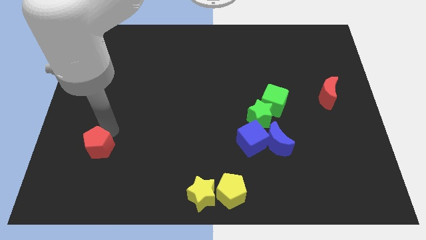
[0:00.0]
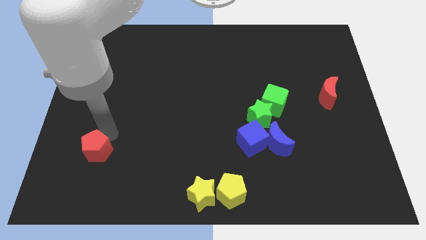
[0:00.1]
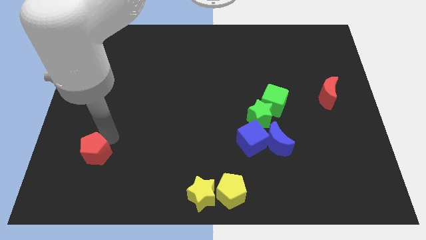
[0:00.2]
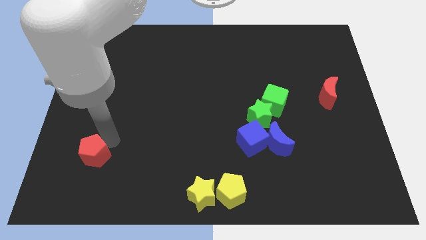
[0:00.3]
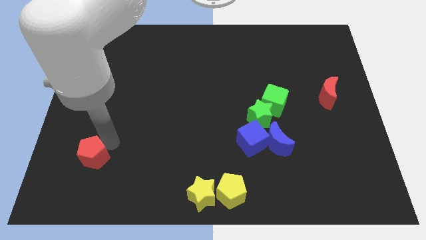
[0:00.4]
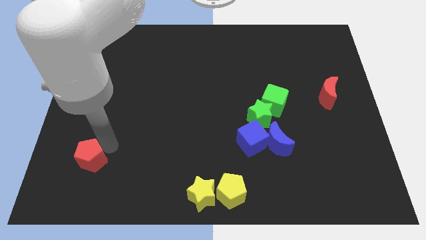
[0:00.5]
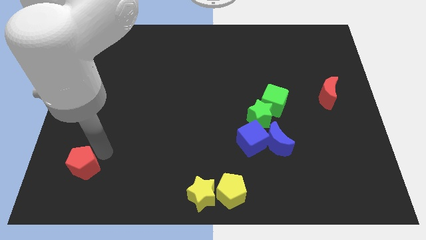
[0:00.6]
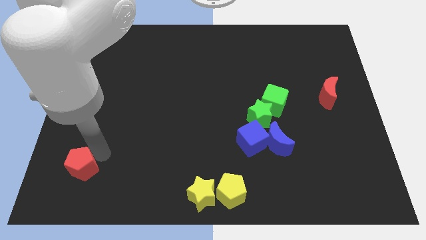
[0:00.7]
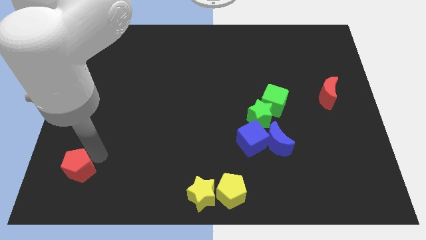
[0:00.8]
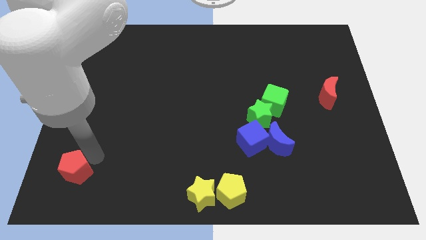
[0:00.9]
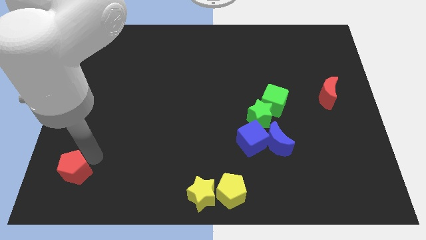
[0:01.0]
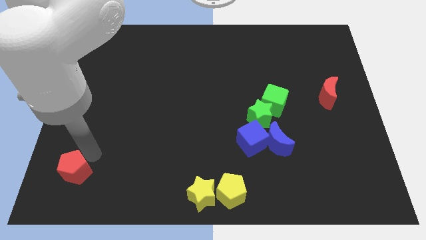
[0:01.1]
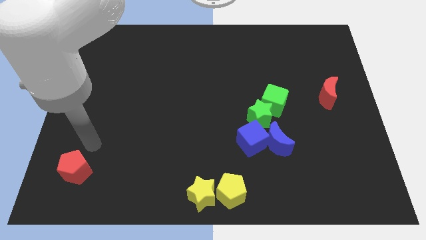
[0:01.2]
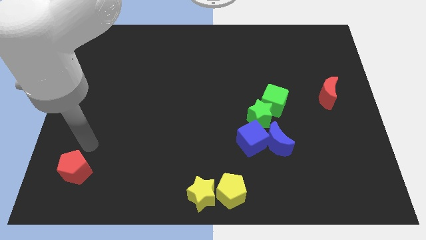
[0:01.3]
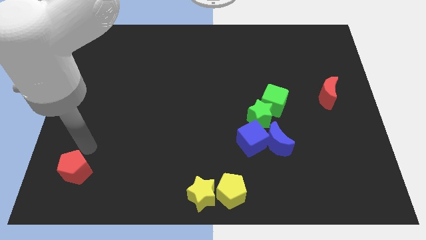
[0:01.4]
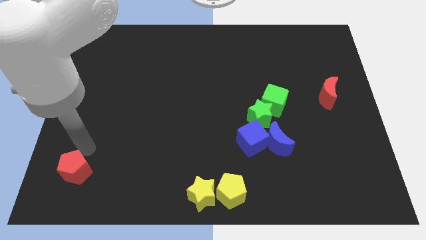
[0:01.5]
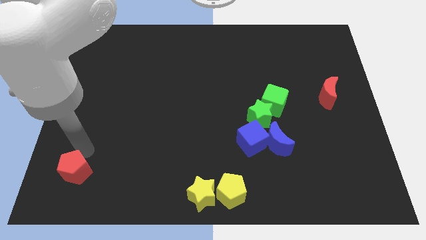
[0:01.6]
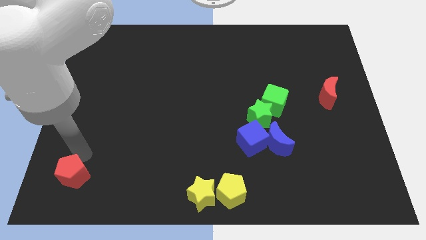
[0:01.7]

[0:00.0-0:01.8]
push the red pentagon slightly to the bottom

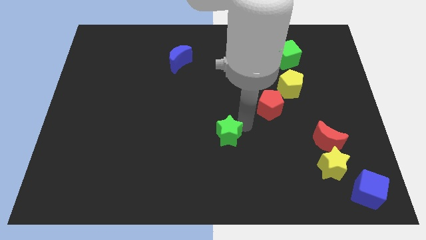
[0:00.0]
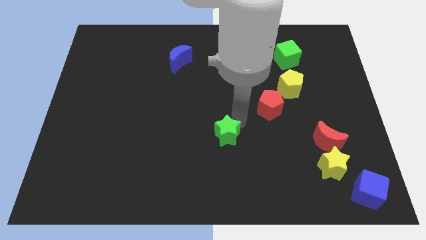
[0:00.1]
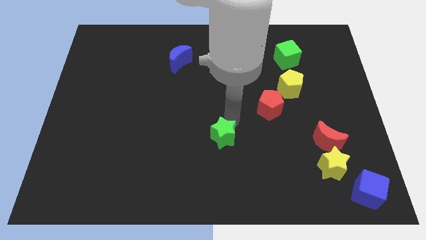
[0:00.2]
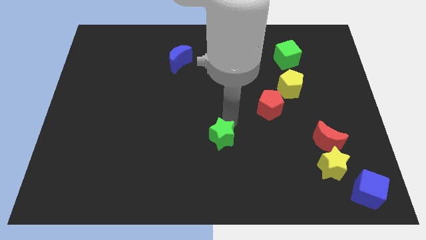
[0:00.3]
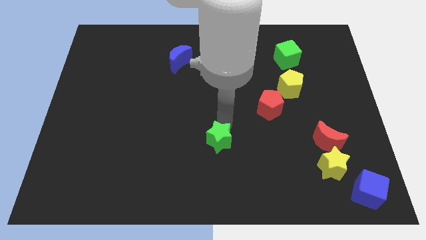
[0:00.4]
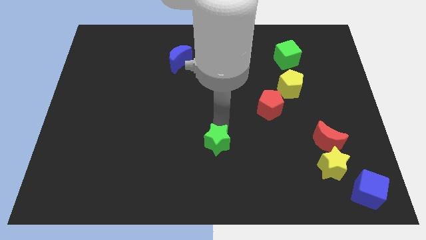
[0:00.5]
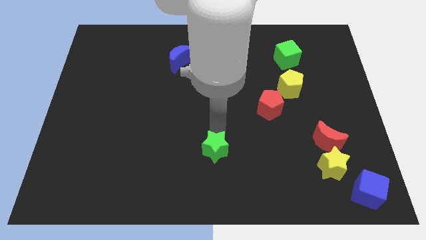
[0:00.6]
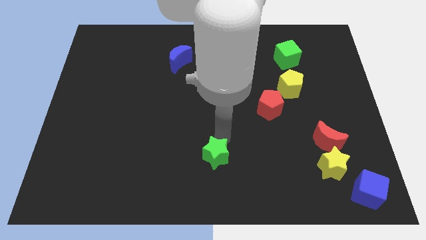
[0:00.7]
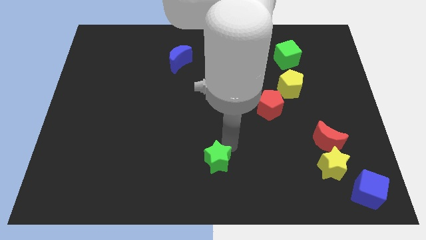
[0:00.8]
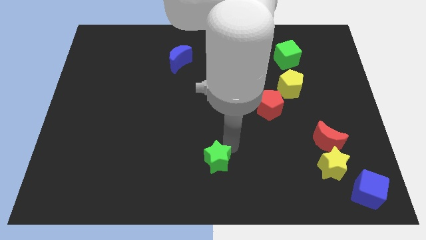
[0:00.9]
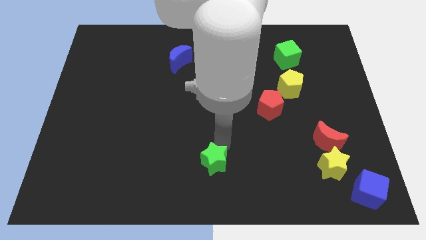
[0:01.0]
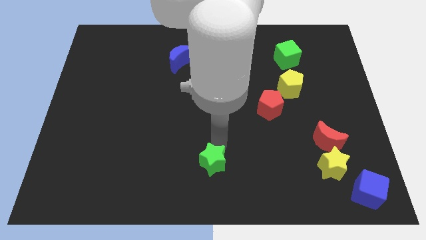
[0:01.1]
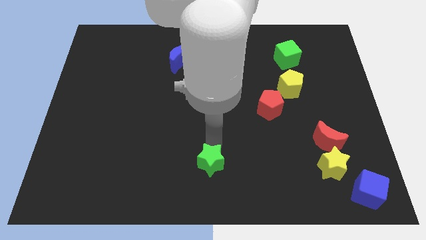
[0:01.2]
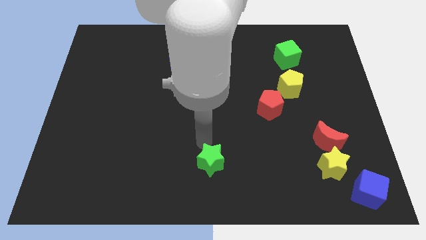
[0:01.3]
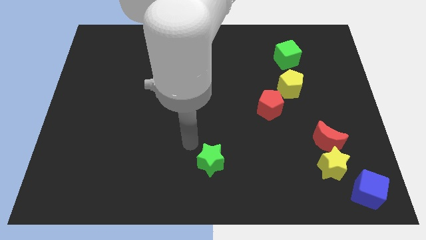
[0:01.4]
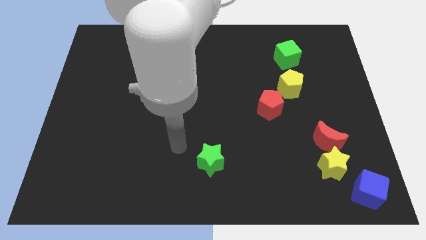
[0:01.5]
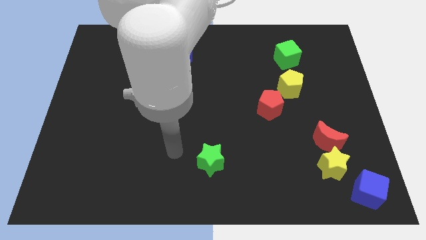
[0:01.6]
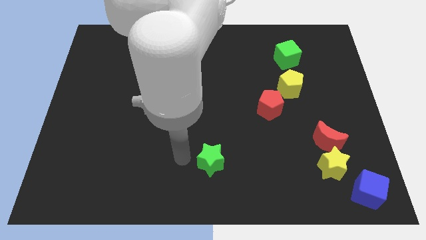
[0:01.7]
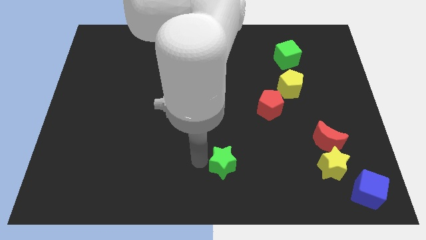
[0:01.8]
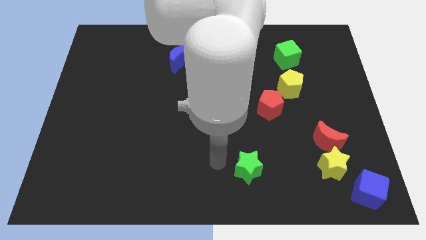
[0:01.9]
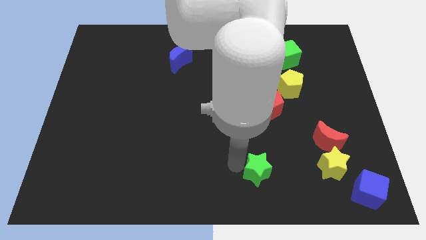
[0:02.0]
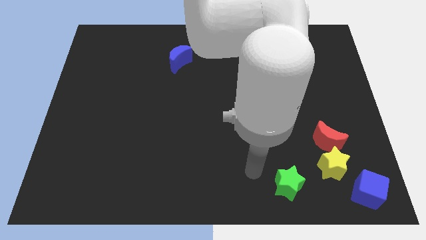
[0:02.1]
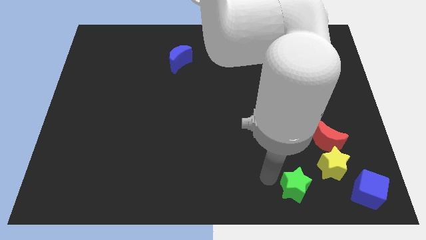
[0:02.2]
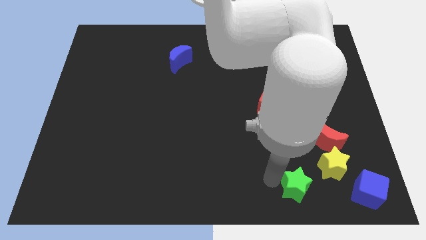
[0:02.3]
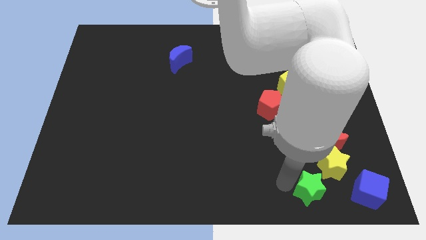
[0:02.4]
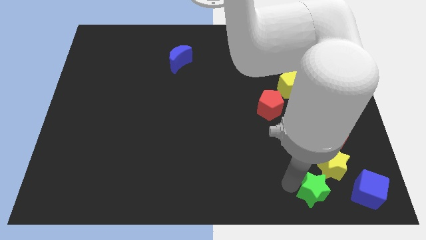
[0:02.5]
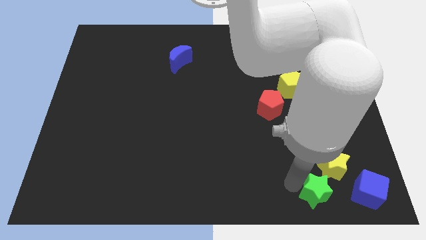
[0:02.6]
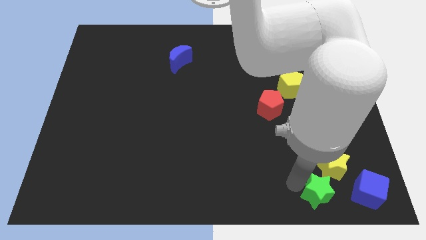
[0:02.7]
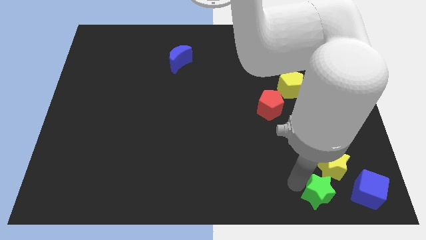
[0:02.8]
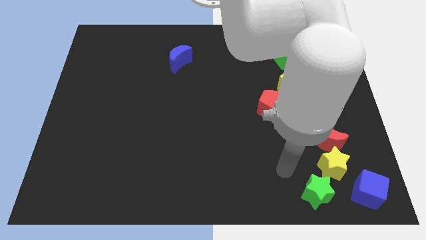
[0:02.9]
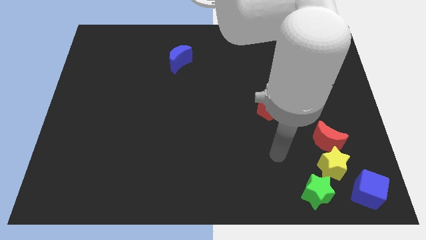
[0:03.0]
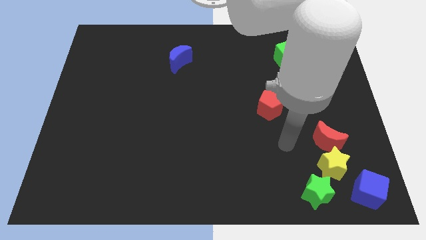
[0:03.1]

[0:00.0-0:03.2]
move the green star to the bottom left to the yellow star

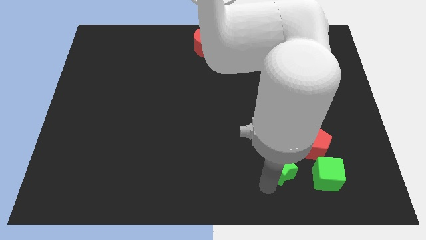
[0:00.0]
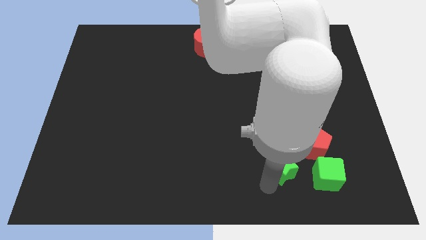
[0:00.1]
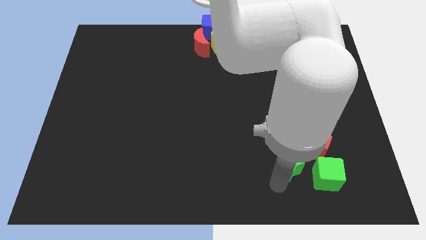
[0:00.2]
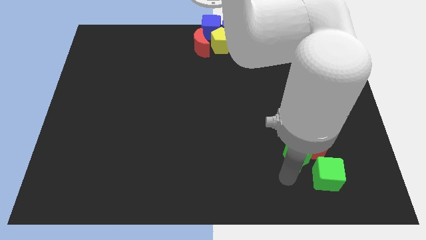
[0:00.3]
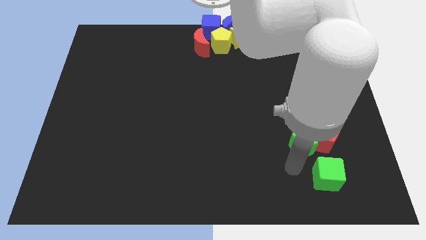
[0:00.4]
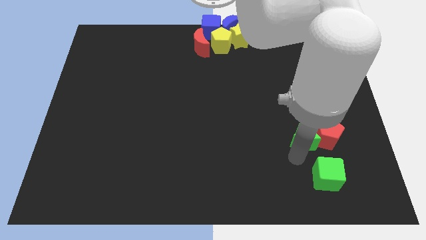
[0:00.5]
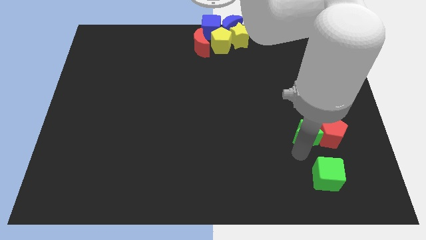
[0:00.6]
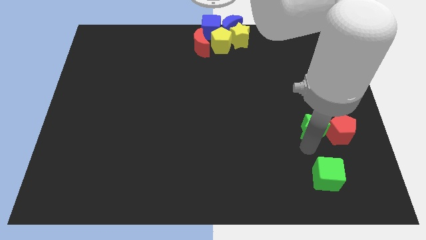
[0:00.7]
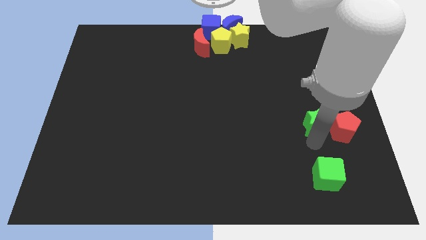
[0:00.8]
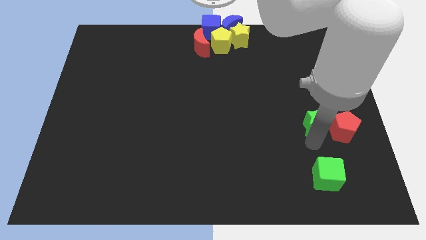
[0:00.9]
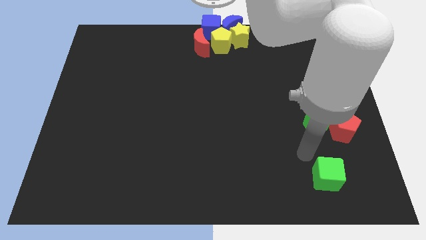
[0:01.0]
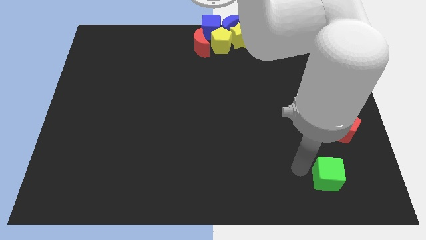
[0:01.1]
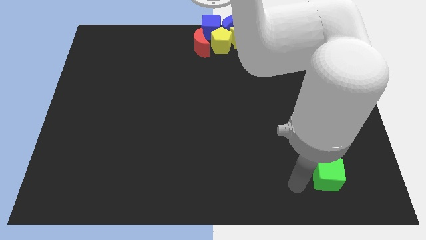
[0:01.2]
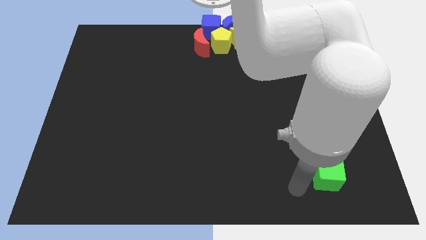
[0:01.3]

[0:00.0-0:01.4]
push the green star along with the red pentagon

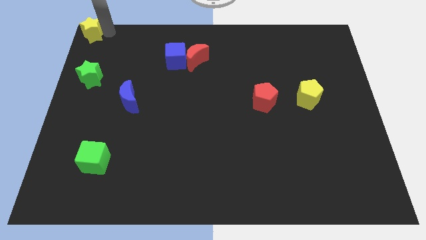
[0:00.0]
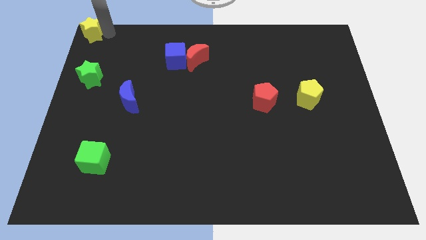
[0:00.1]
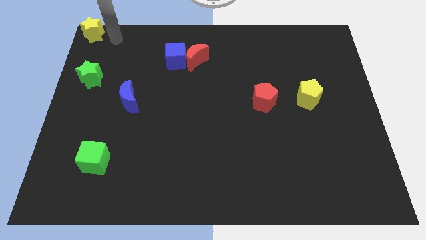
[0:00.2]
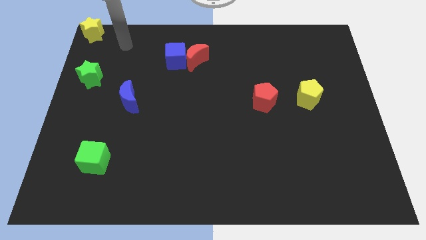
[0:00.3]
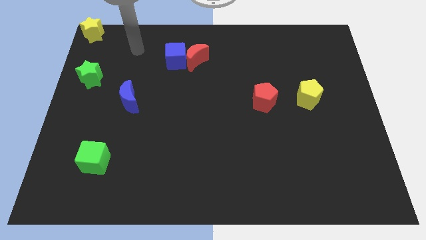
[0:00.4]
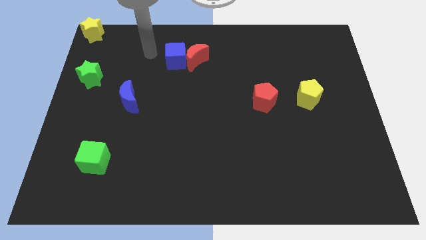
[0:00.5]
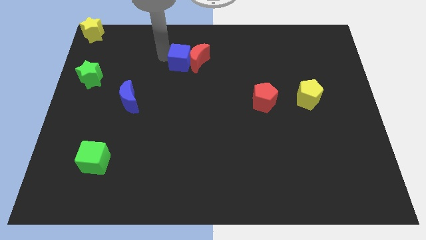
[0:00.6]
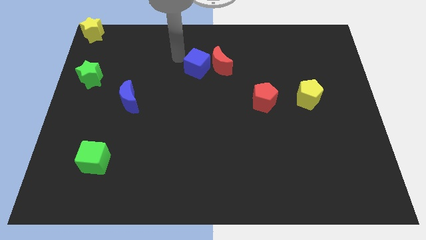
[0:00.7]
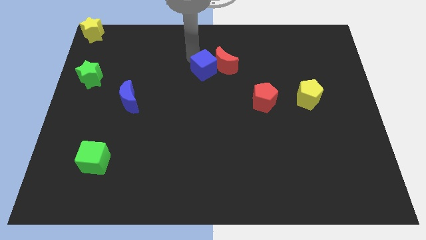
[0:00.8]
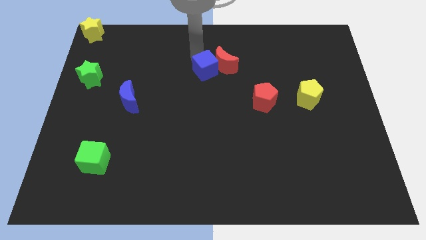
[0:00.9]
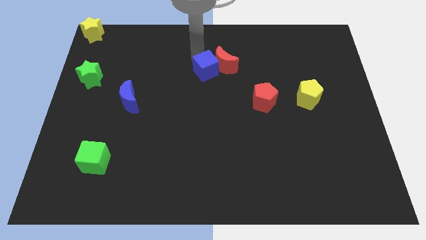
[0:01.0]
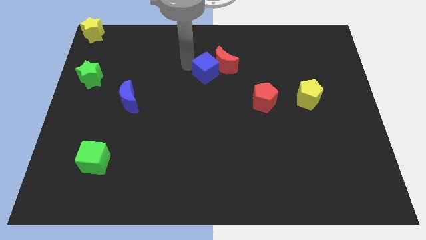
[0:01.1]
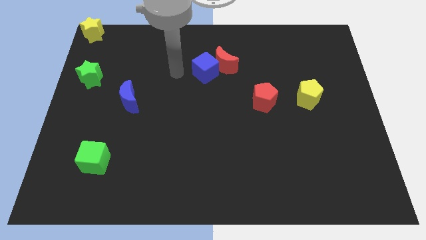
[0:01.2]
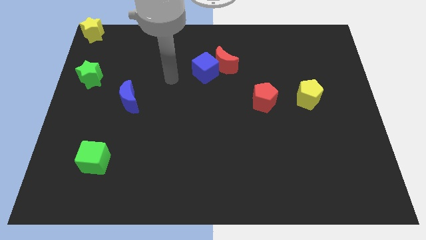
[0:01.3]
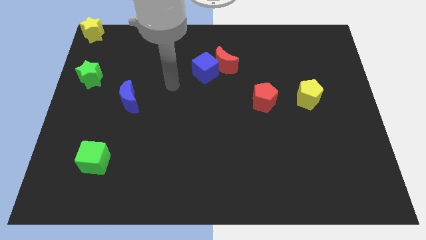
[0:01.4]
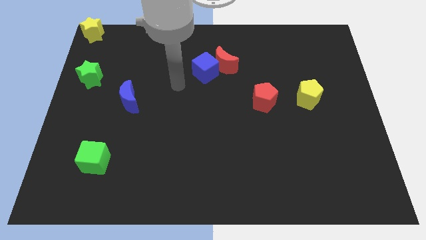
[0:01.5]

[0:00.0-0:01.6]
push the blue cube and red moon towards the red pentagon

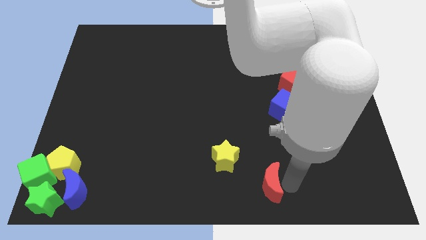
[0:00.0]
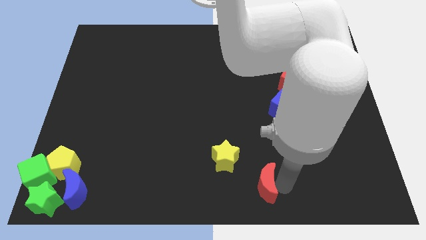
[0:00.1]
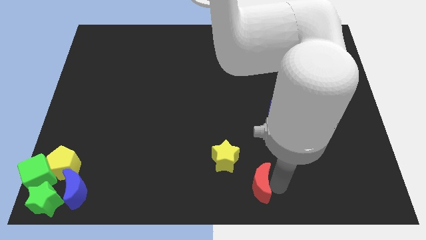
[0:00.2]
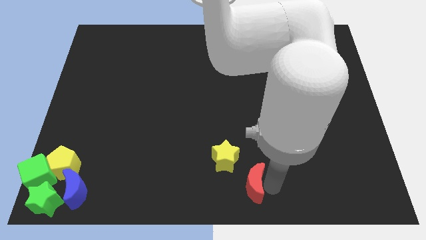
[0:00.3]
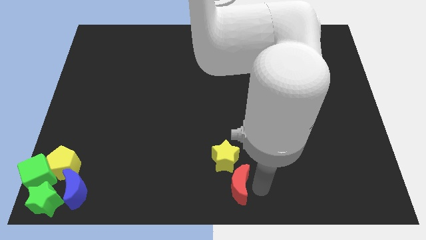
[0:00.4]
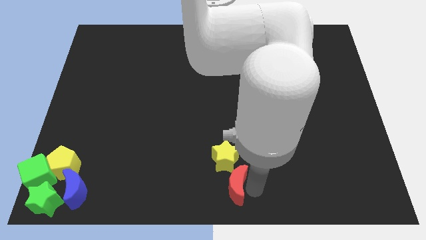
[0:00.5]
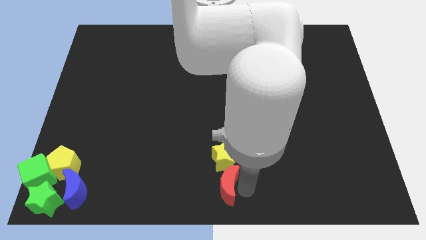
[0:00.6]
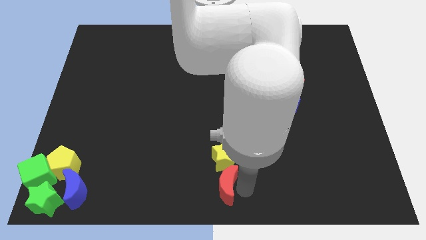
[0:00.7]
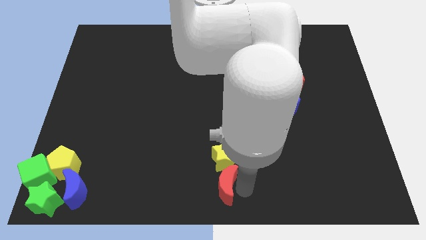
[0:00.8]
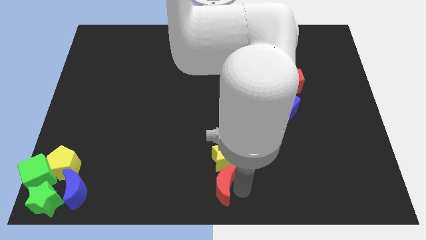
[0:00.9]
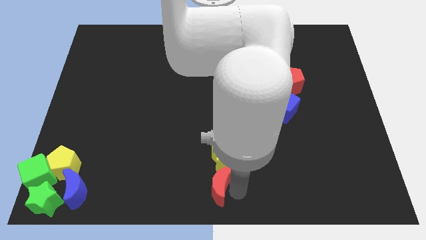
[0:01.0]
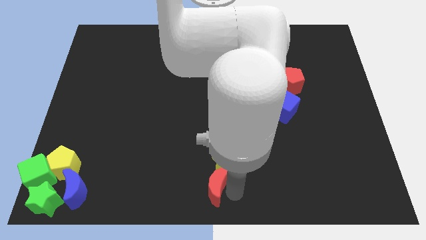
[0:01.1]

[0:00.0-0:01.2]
place the red crescent below the yellow star
